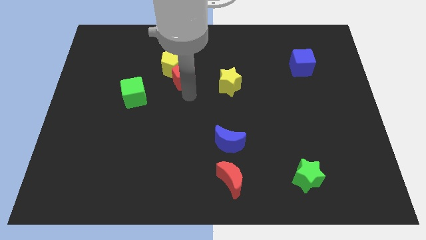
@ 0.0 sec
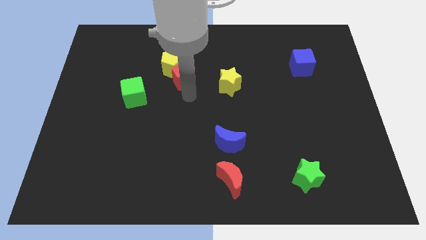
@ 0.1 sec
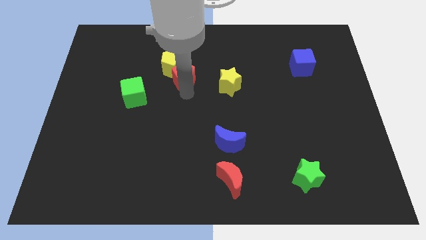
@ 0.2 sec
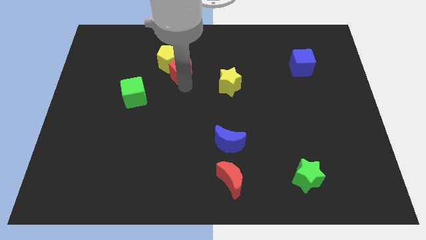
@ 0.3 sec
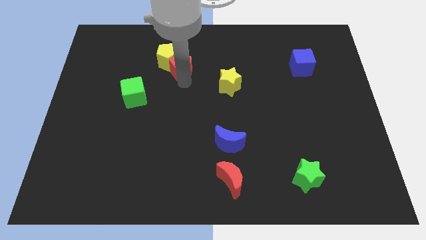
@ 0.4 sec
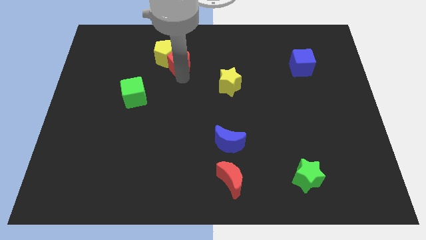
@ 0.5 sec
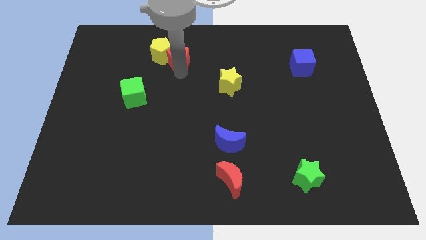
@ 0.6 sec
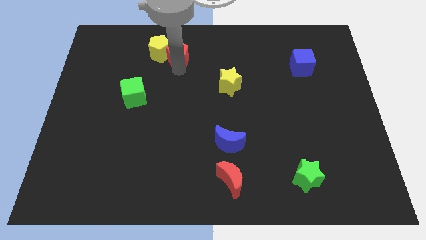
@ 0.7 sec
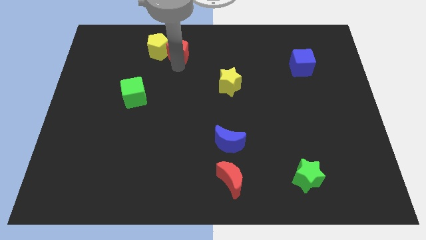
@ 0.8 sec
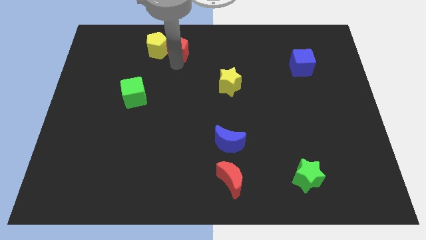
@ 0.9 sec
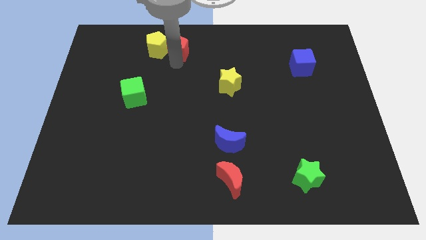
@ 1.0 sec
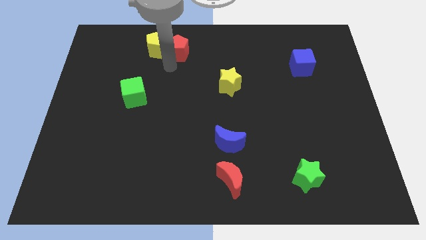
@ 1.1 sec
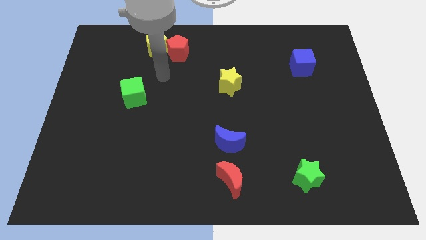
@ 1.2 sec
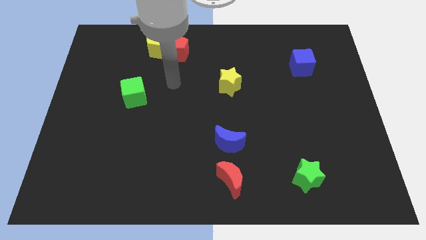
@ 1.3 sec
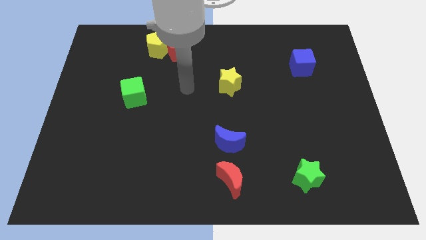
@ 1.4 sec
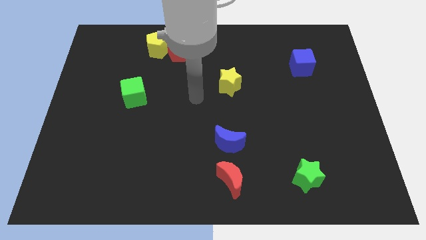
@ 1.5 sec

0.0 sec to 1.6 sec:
push yellow pentagon with red pentagon towards top left

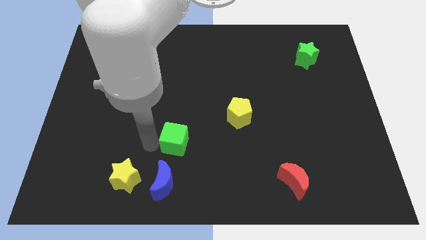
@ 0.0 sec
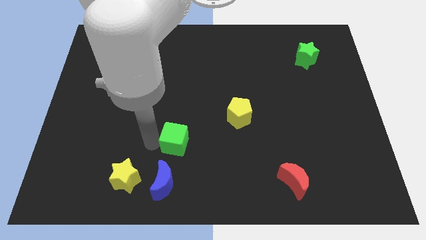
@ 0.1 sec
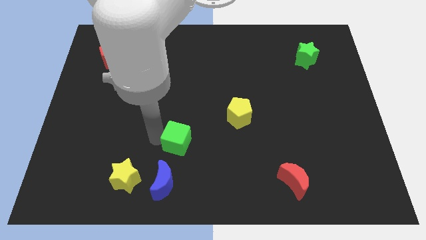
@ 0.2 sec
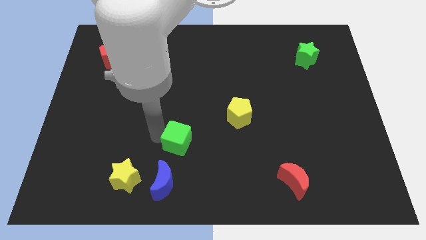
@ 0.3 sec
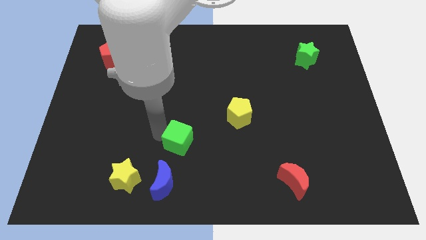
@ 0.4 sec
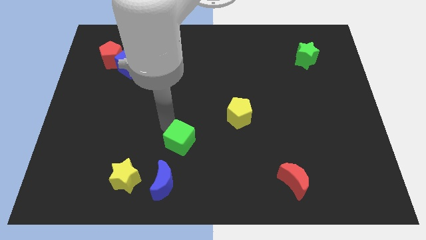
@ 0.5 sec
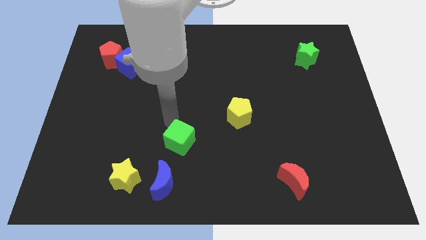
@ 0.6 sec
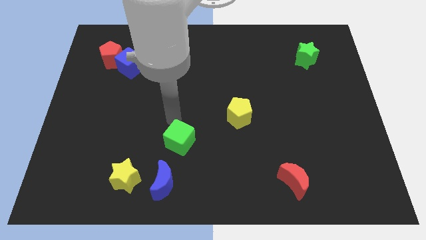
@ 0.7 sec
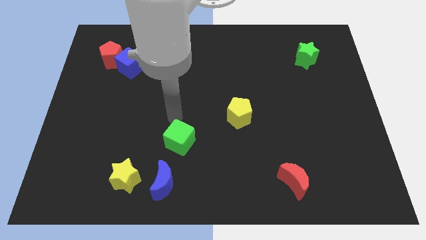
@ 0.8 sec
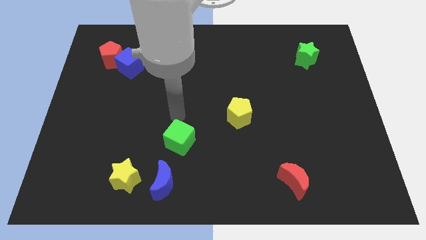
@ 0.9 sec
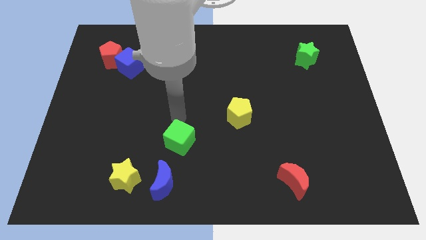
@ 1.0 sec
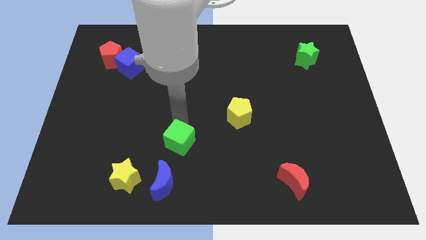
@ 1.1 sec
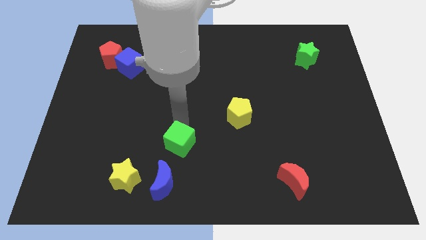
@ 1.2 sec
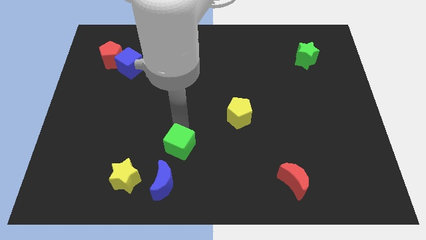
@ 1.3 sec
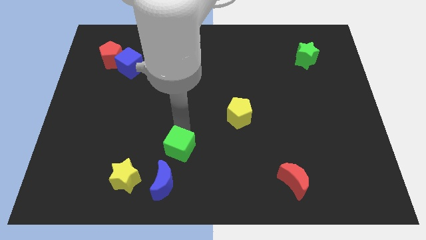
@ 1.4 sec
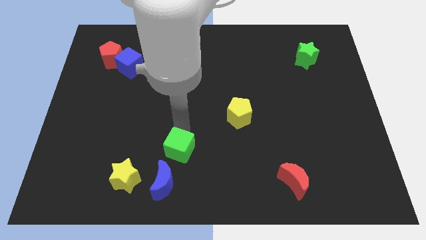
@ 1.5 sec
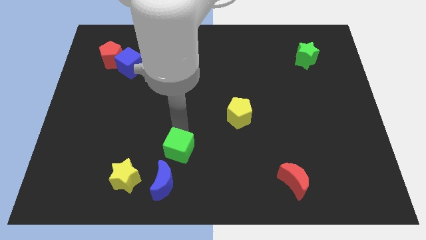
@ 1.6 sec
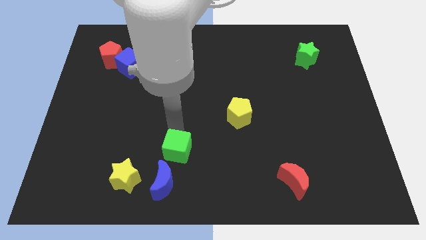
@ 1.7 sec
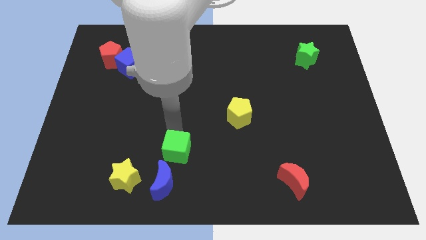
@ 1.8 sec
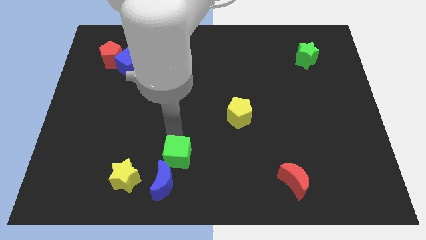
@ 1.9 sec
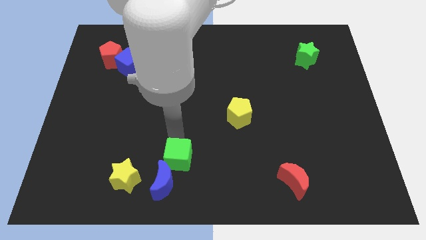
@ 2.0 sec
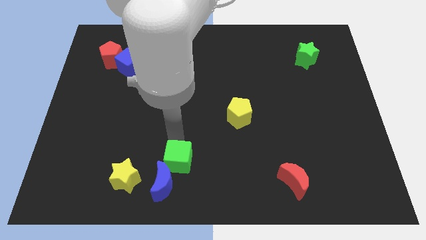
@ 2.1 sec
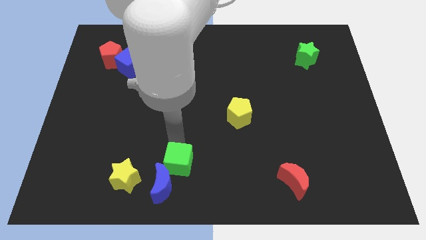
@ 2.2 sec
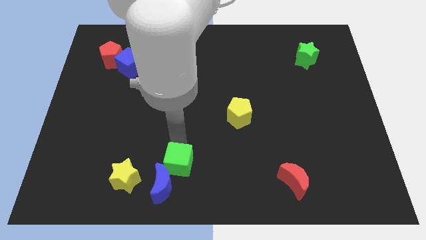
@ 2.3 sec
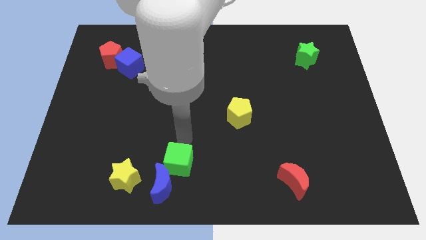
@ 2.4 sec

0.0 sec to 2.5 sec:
put the green cube into the blue moon

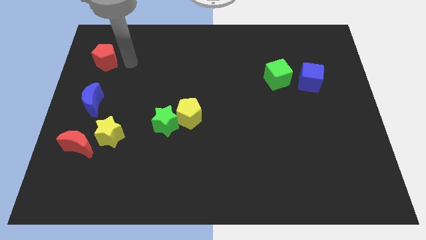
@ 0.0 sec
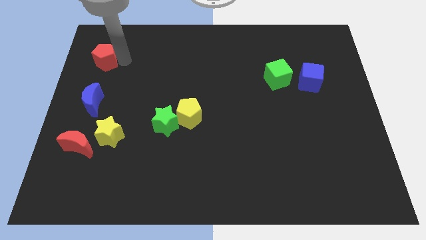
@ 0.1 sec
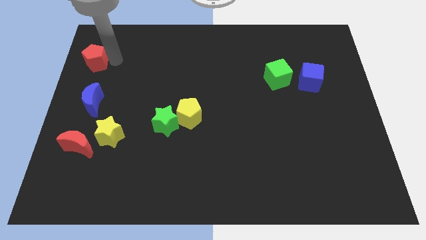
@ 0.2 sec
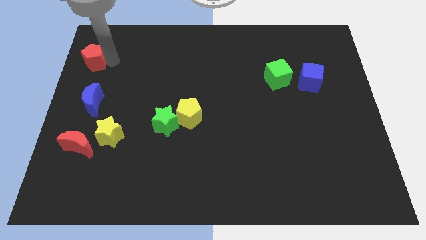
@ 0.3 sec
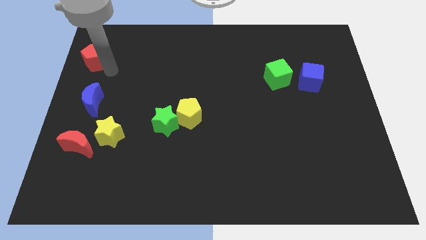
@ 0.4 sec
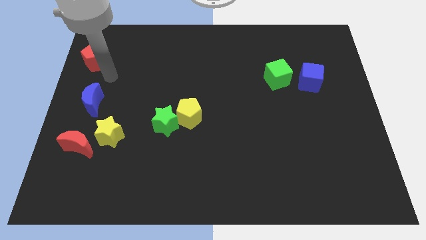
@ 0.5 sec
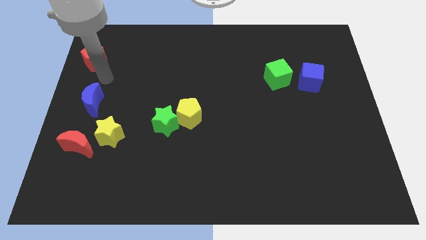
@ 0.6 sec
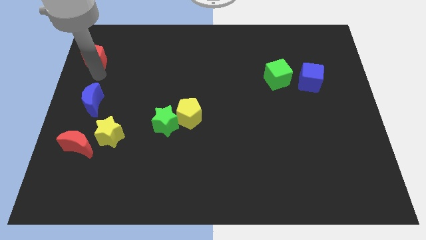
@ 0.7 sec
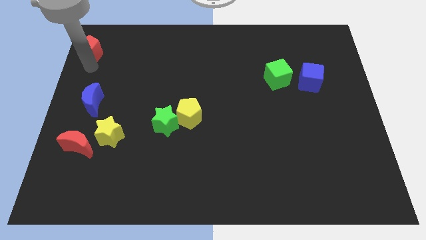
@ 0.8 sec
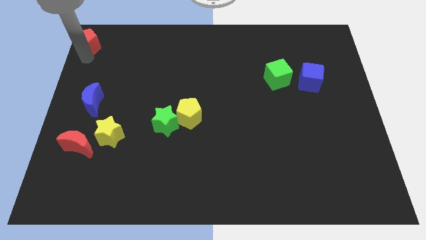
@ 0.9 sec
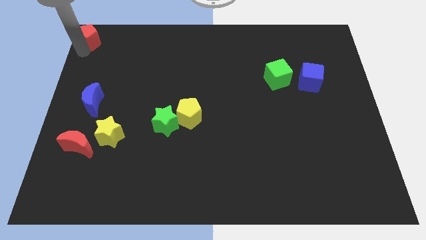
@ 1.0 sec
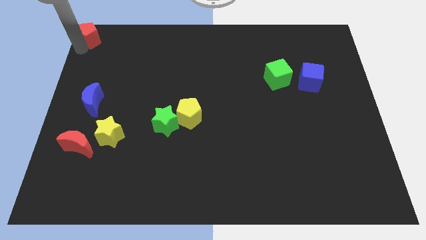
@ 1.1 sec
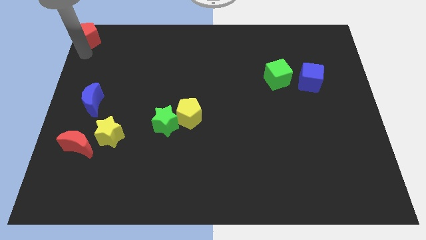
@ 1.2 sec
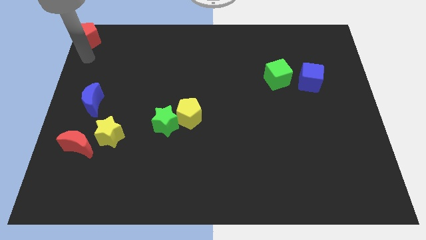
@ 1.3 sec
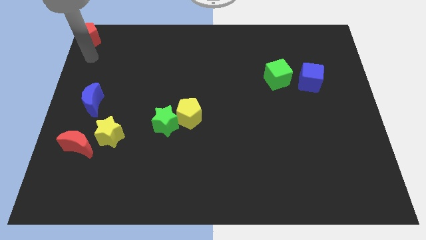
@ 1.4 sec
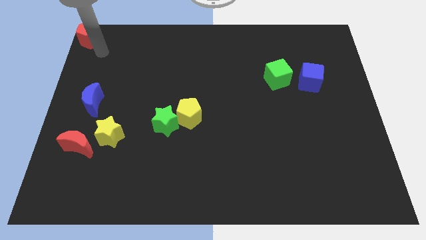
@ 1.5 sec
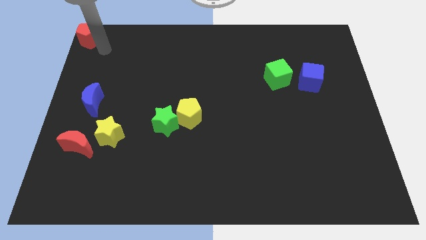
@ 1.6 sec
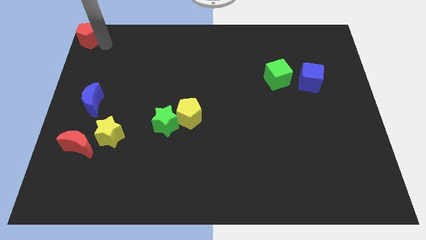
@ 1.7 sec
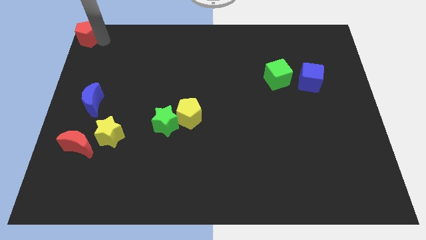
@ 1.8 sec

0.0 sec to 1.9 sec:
move the red pentagon to the top left of the board

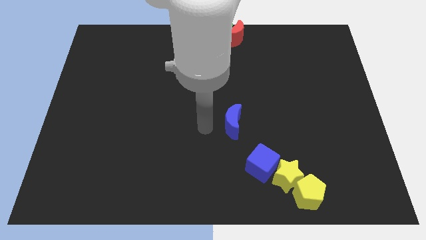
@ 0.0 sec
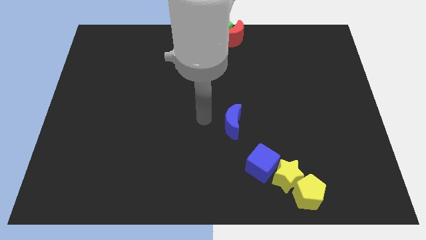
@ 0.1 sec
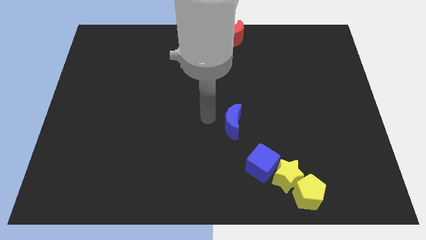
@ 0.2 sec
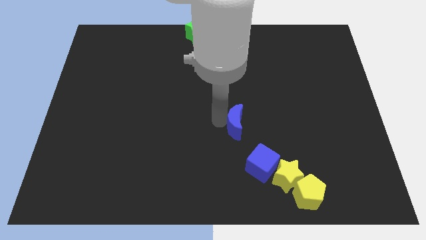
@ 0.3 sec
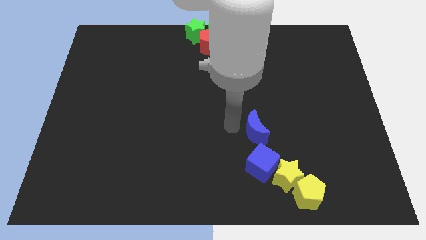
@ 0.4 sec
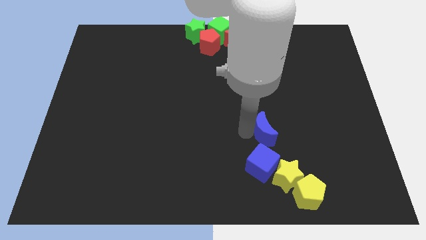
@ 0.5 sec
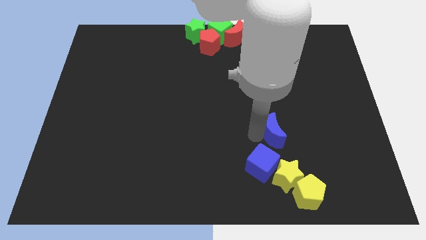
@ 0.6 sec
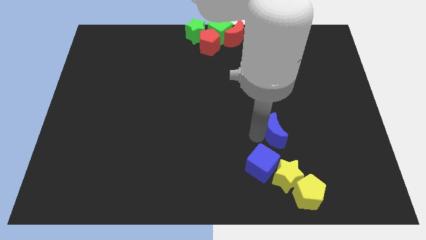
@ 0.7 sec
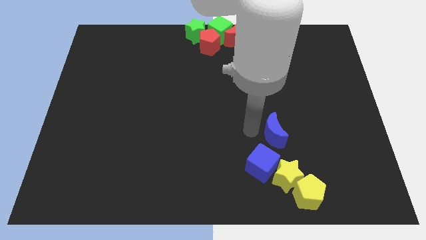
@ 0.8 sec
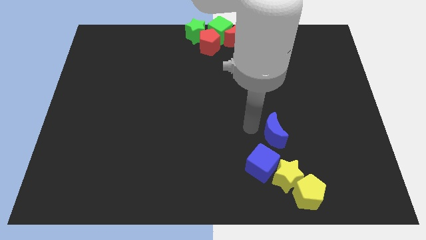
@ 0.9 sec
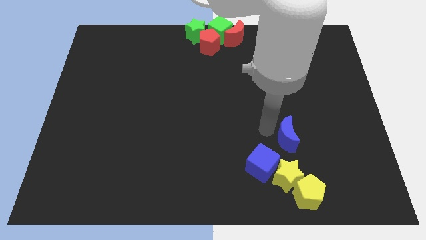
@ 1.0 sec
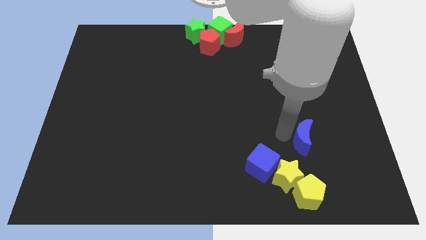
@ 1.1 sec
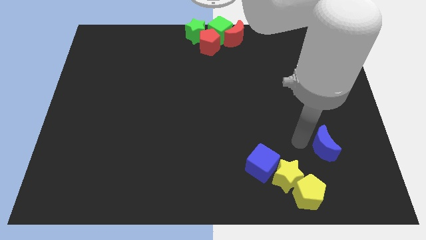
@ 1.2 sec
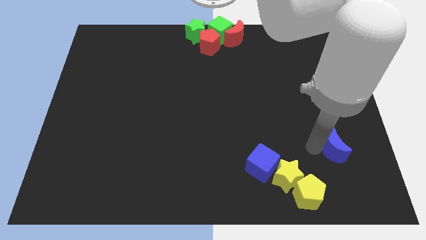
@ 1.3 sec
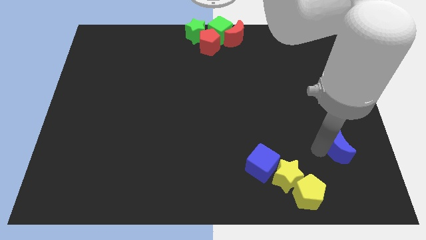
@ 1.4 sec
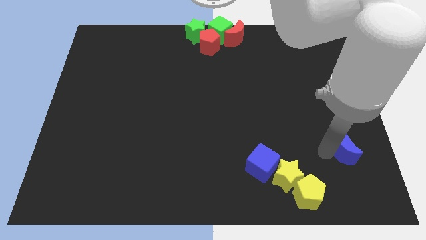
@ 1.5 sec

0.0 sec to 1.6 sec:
place the blue moon diagonally top right to the yellow pentagon

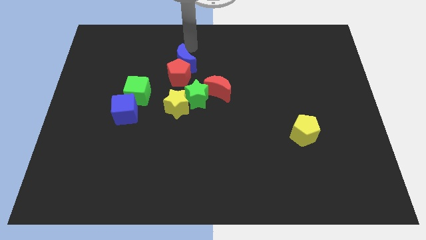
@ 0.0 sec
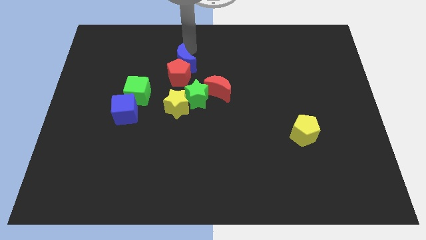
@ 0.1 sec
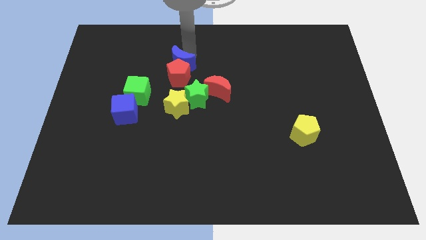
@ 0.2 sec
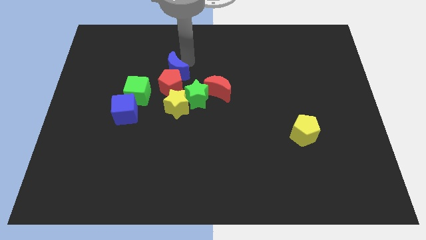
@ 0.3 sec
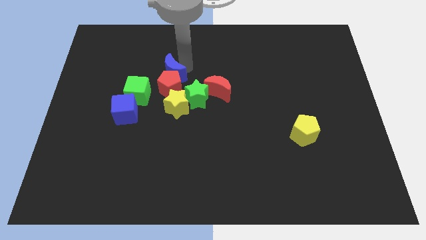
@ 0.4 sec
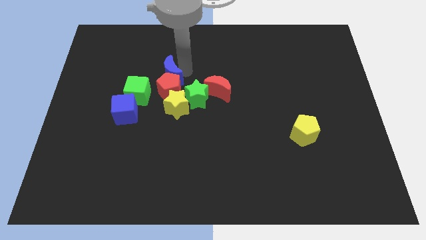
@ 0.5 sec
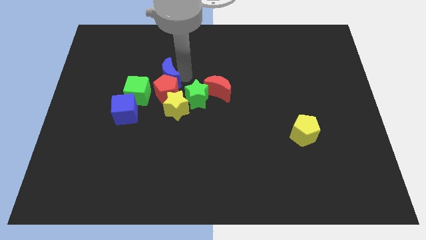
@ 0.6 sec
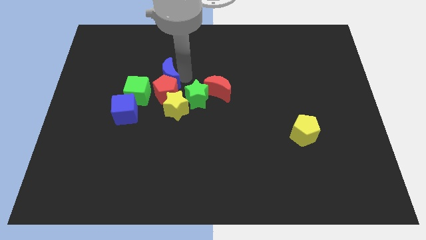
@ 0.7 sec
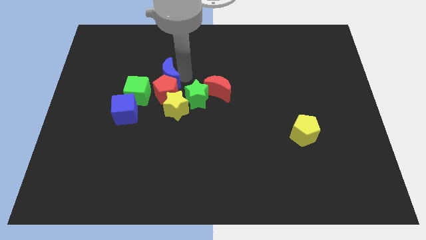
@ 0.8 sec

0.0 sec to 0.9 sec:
push the blue moon along with the red pentagon towards the yellow star

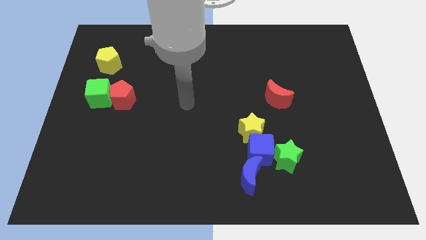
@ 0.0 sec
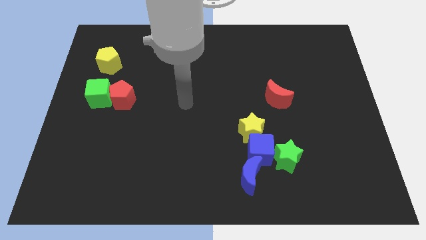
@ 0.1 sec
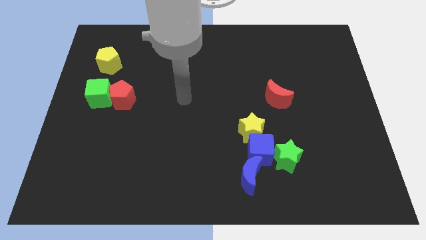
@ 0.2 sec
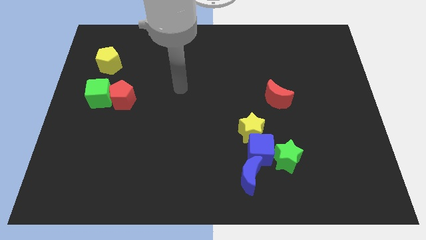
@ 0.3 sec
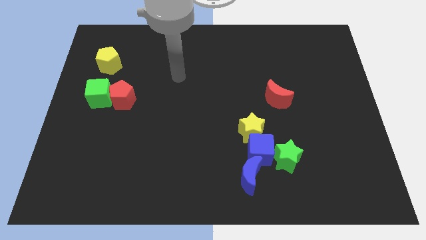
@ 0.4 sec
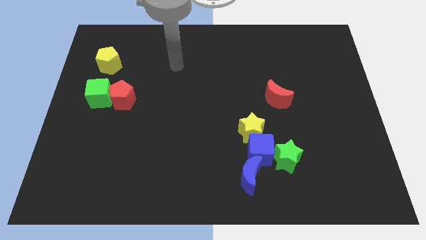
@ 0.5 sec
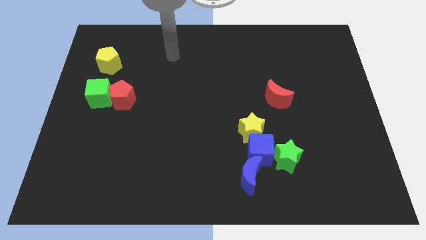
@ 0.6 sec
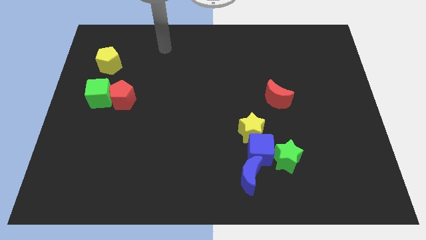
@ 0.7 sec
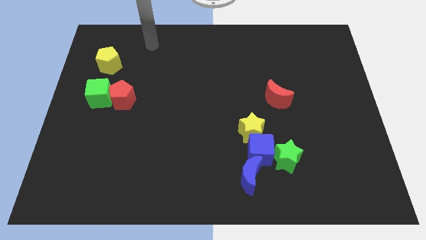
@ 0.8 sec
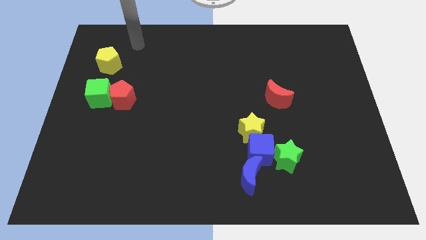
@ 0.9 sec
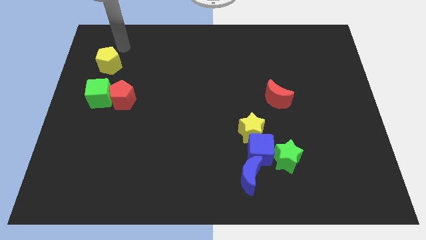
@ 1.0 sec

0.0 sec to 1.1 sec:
slide your arm close to yellow pentagon
